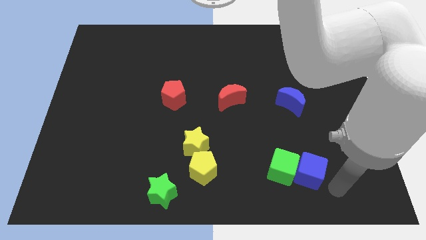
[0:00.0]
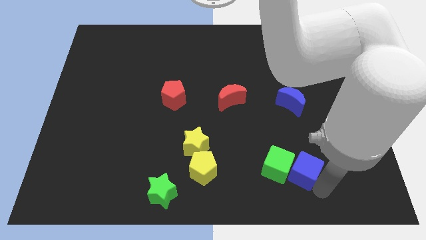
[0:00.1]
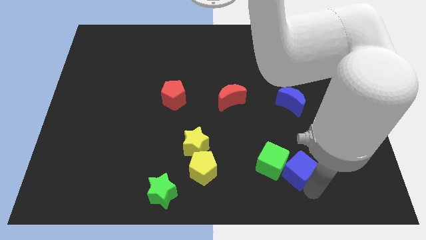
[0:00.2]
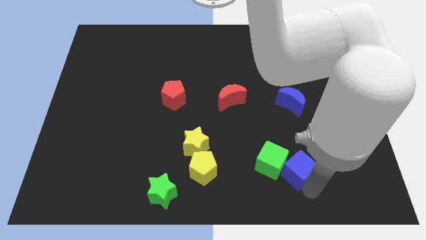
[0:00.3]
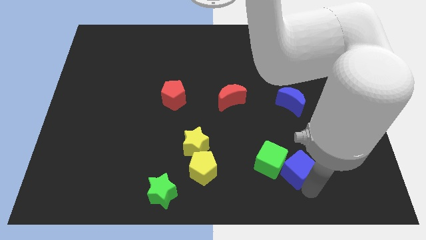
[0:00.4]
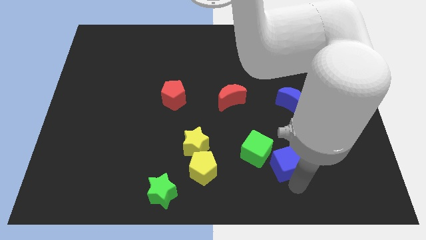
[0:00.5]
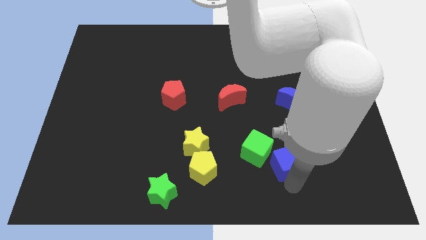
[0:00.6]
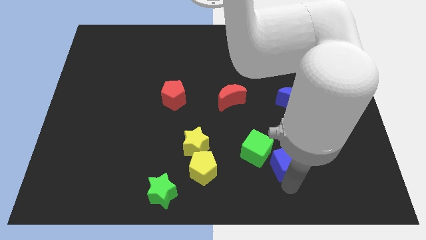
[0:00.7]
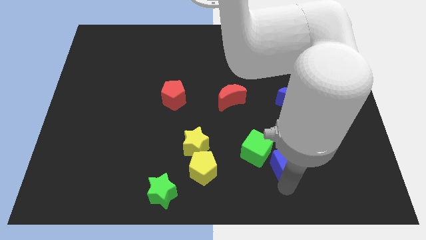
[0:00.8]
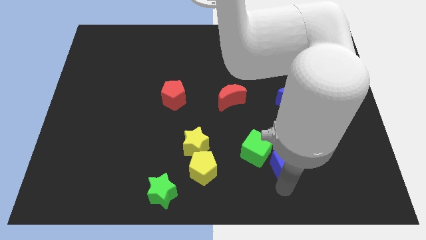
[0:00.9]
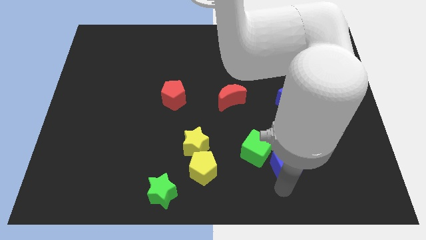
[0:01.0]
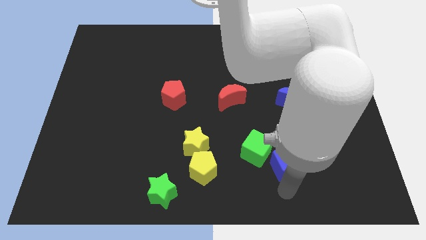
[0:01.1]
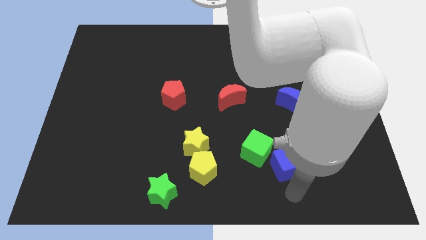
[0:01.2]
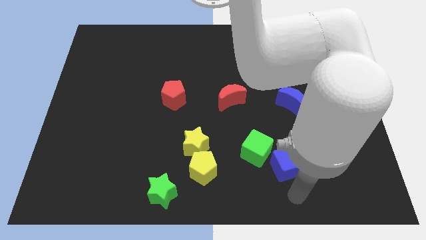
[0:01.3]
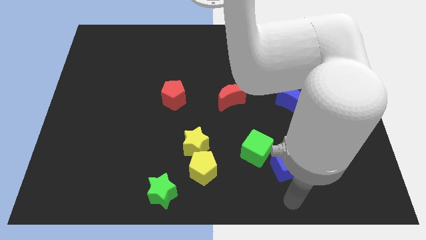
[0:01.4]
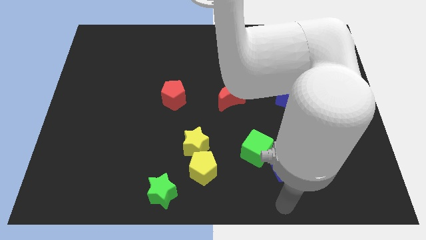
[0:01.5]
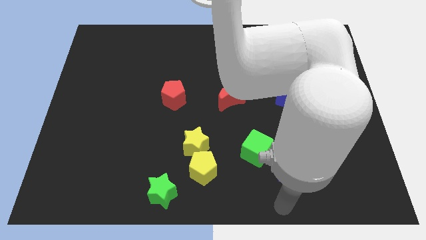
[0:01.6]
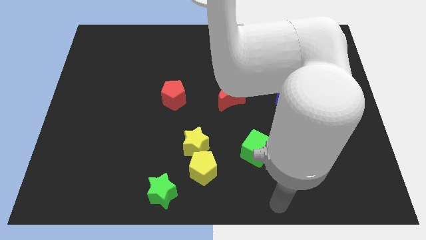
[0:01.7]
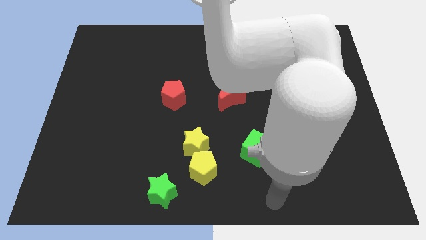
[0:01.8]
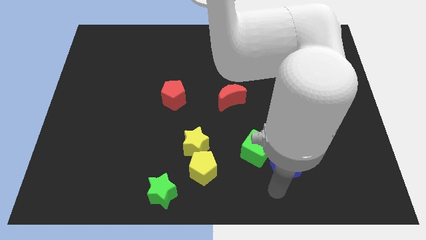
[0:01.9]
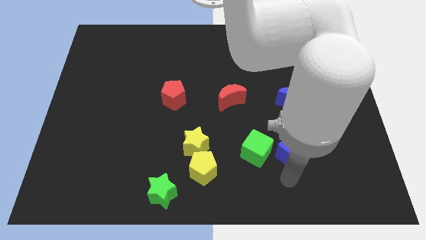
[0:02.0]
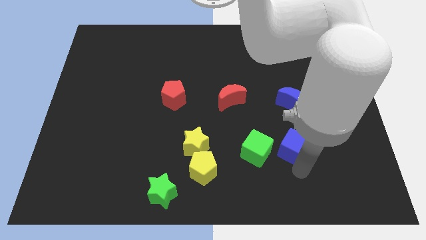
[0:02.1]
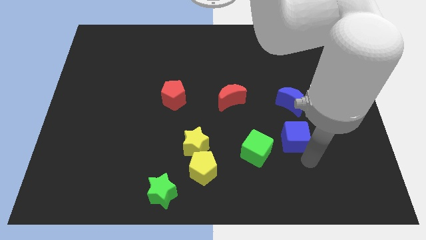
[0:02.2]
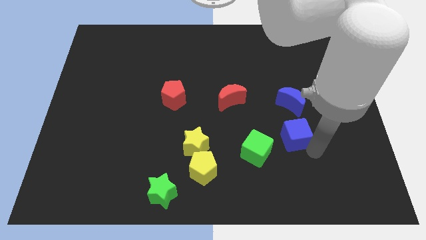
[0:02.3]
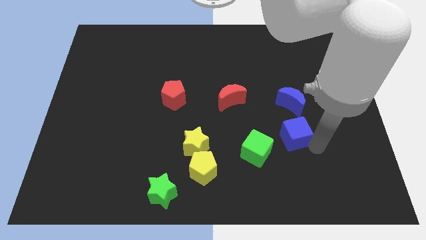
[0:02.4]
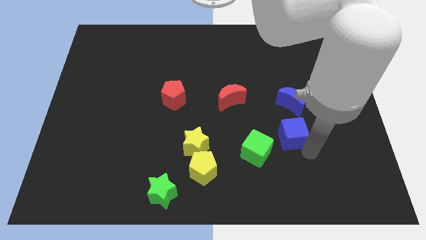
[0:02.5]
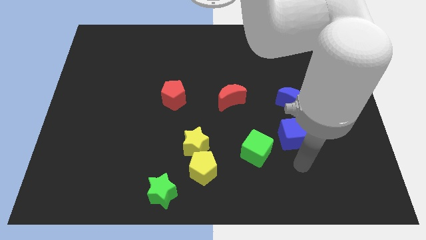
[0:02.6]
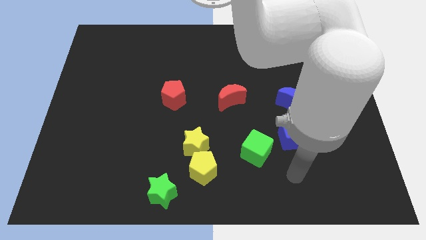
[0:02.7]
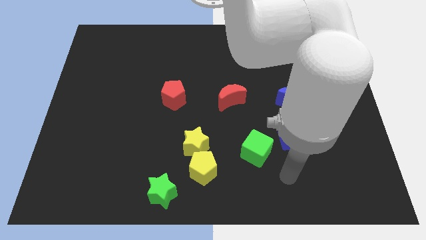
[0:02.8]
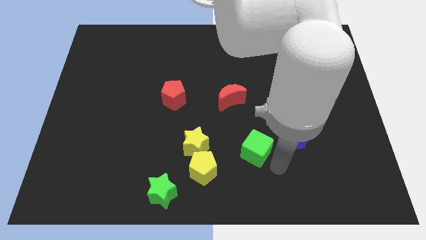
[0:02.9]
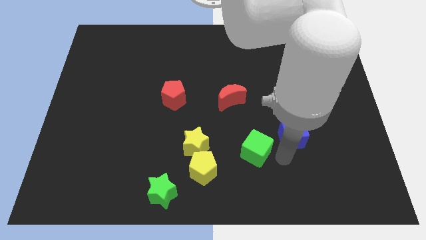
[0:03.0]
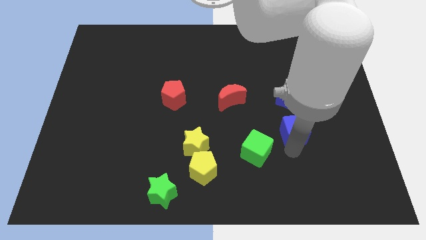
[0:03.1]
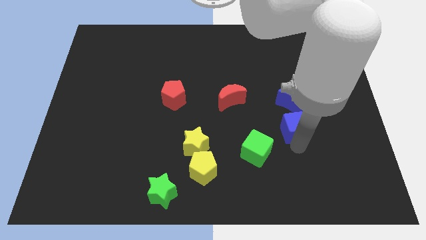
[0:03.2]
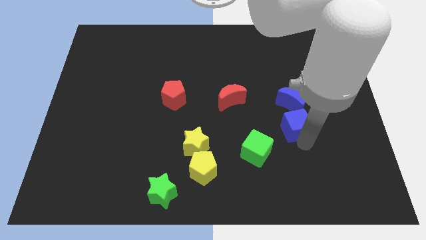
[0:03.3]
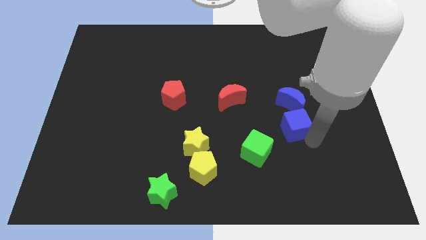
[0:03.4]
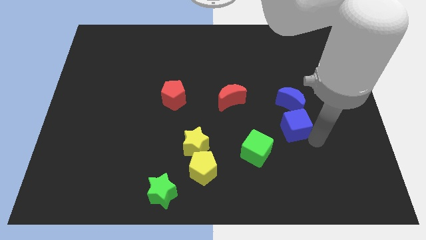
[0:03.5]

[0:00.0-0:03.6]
form a diagonal line with green and the blue cube

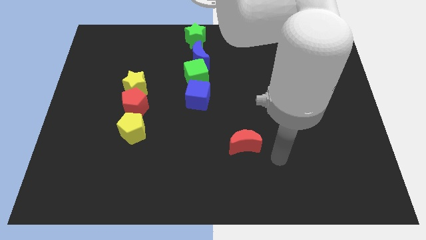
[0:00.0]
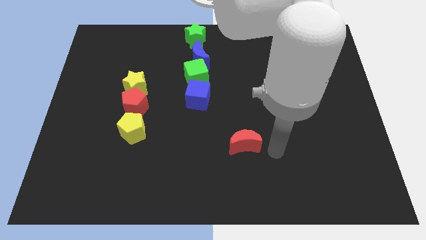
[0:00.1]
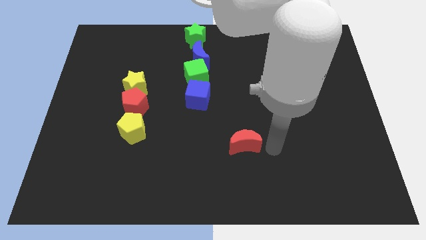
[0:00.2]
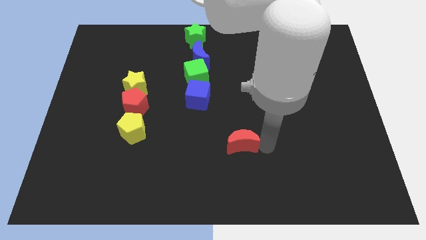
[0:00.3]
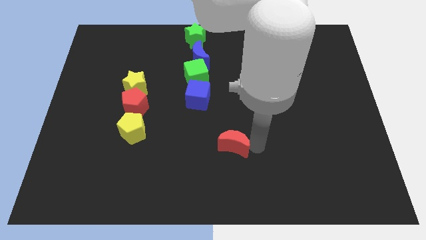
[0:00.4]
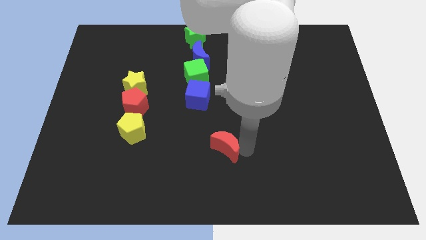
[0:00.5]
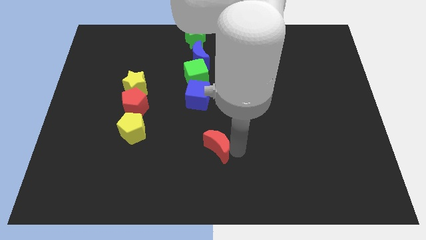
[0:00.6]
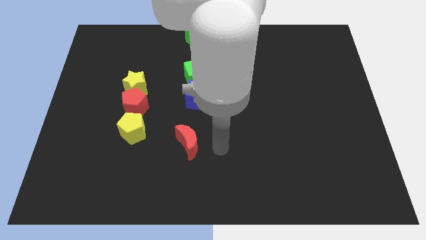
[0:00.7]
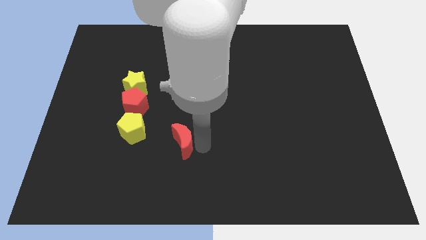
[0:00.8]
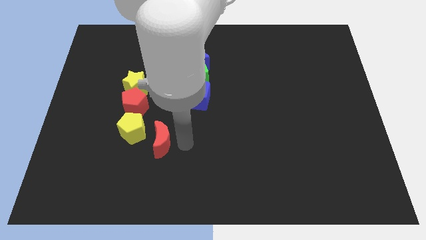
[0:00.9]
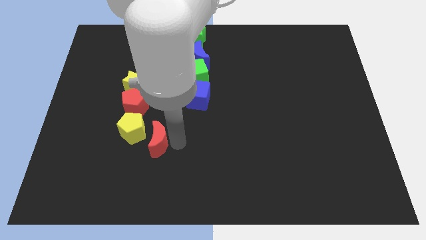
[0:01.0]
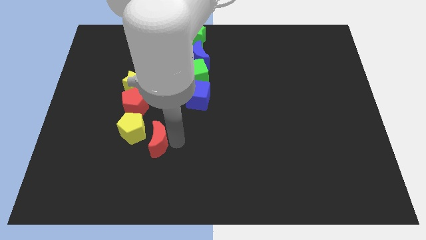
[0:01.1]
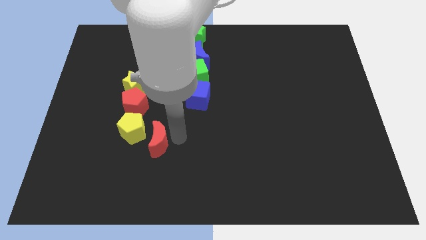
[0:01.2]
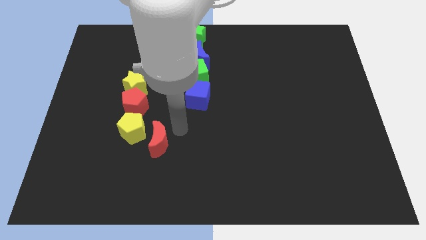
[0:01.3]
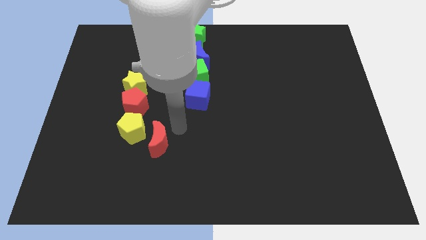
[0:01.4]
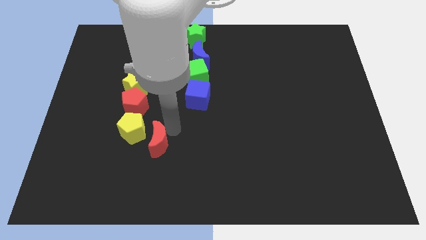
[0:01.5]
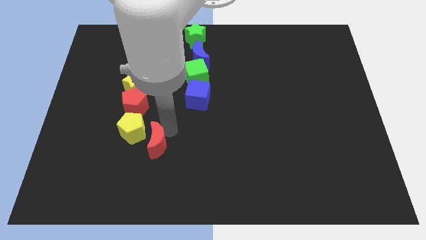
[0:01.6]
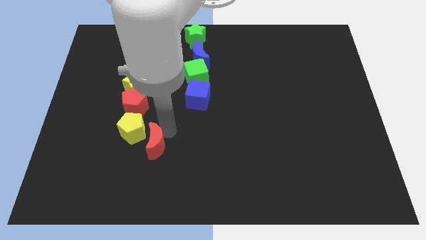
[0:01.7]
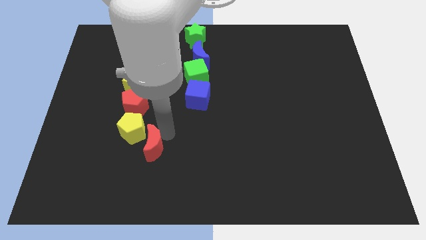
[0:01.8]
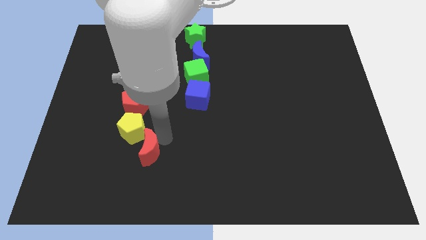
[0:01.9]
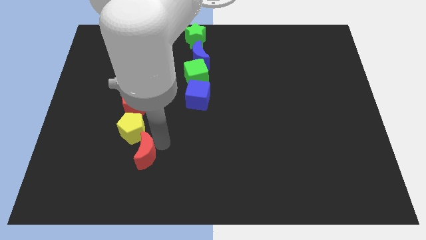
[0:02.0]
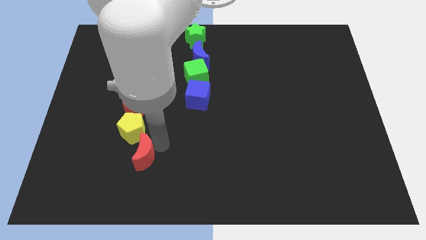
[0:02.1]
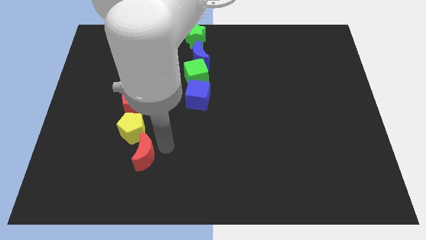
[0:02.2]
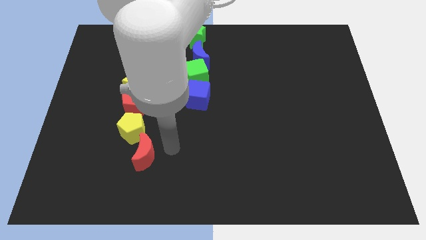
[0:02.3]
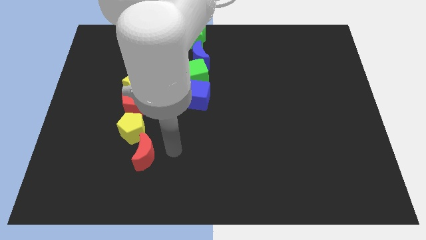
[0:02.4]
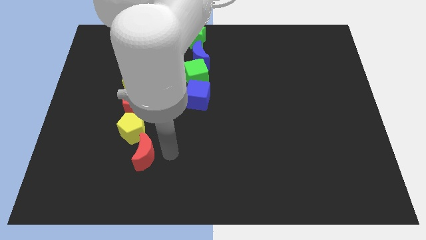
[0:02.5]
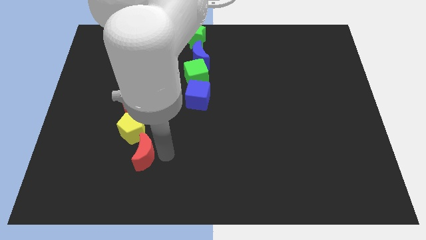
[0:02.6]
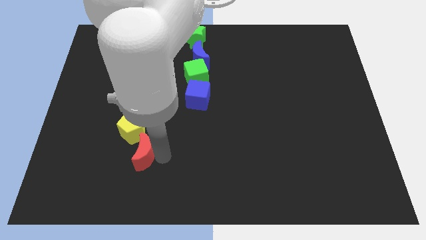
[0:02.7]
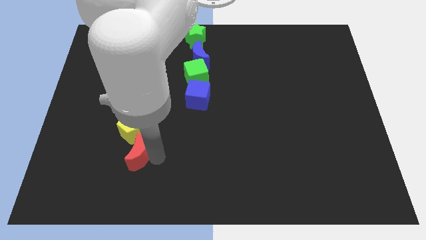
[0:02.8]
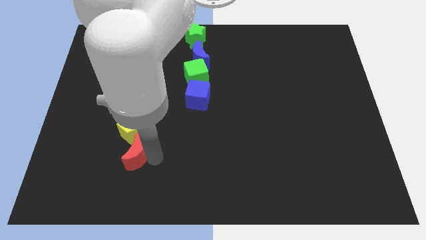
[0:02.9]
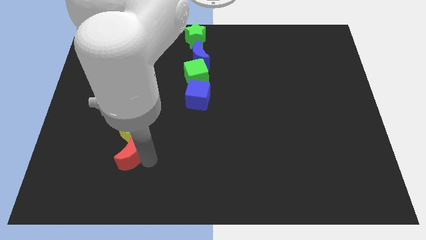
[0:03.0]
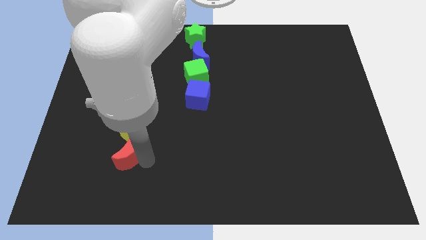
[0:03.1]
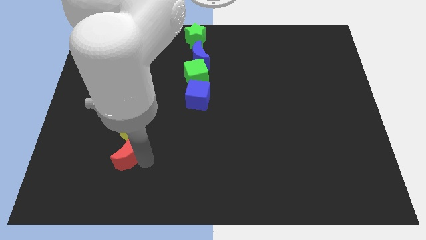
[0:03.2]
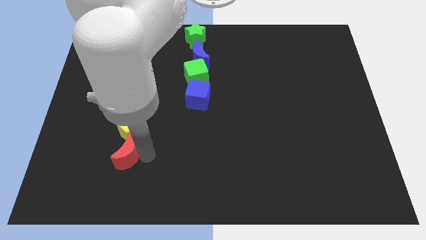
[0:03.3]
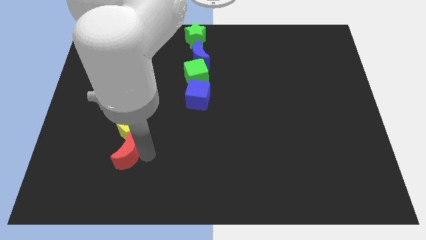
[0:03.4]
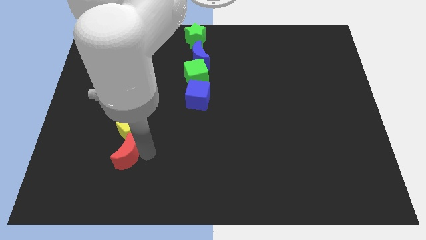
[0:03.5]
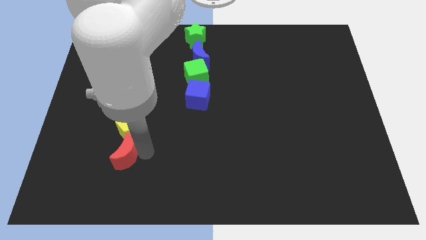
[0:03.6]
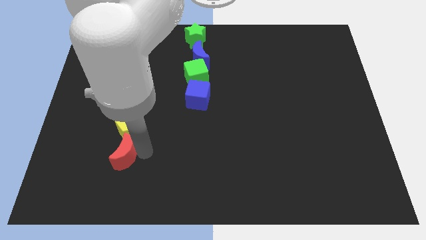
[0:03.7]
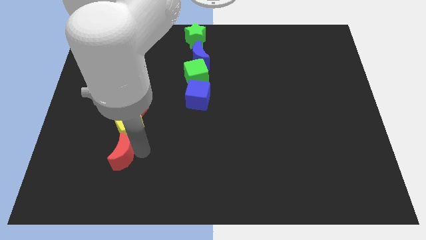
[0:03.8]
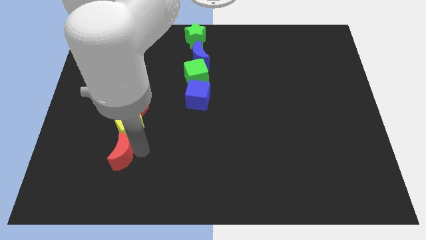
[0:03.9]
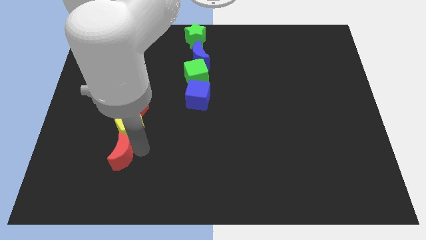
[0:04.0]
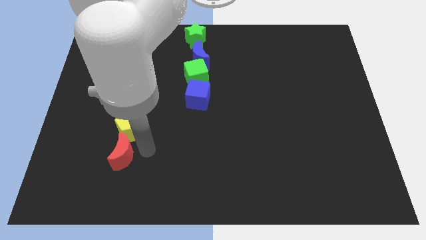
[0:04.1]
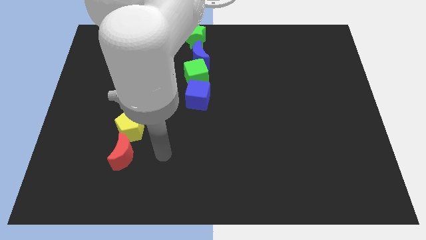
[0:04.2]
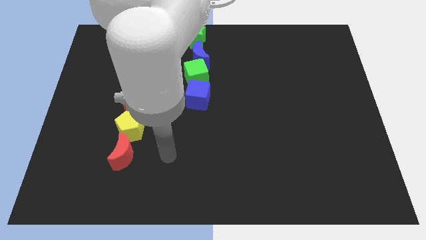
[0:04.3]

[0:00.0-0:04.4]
drag the red moon below the yellow pentagon

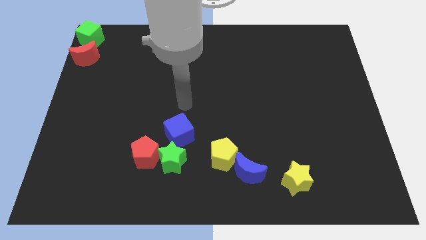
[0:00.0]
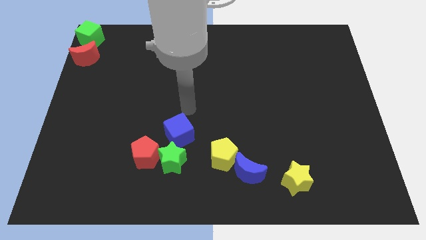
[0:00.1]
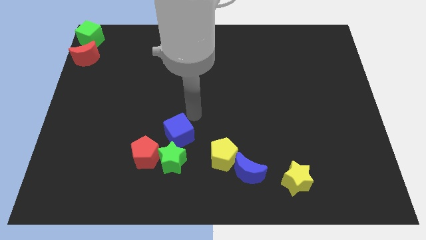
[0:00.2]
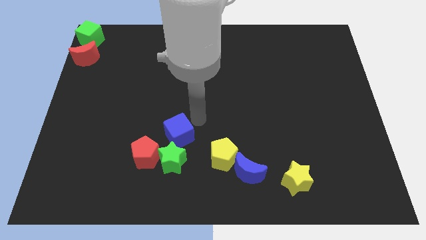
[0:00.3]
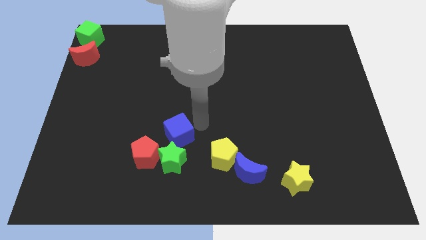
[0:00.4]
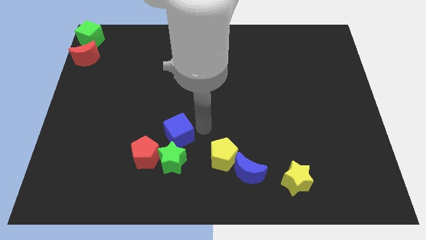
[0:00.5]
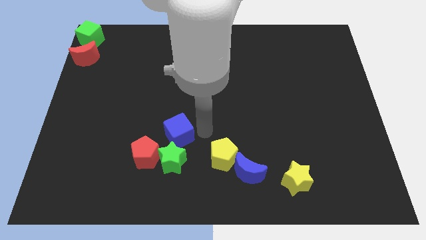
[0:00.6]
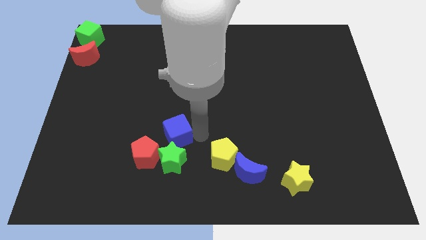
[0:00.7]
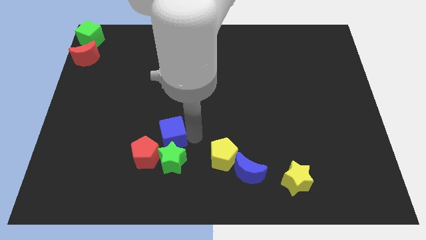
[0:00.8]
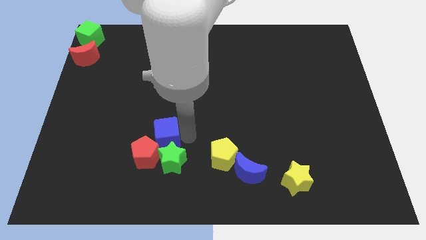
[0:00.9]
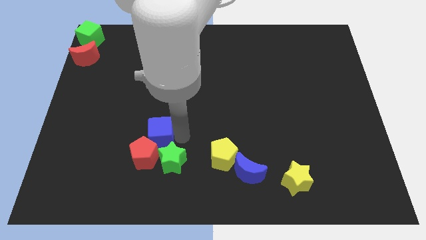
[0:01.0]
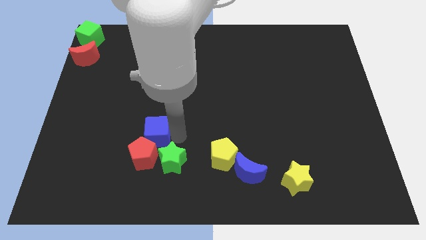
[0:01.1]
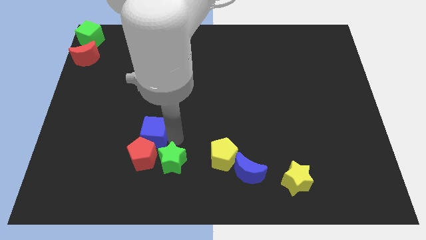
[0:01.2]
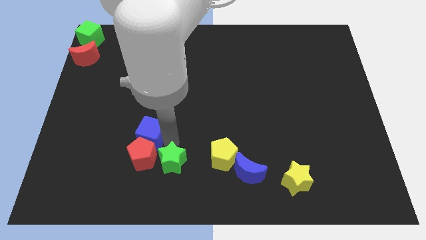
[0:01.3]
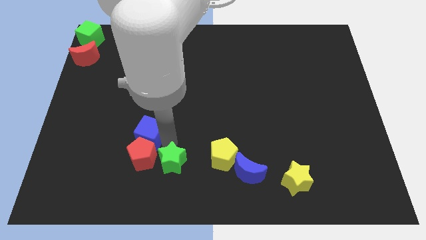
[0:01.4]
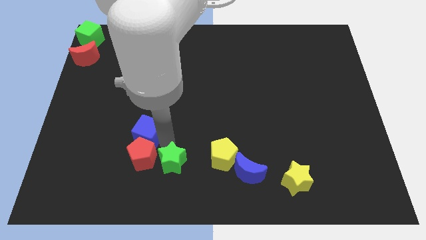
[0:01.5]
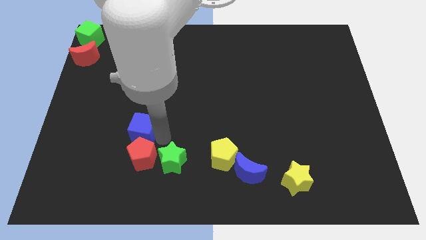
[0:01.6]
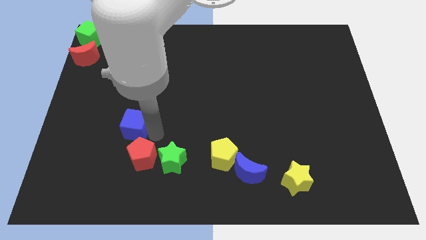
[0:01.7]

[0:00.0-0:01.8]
move the blue cube above the red pentagon
